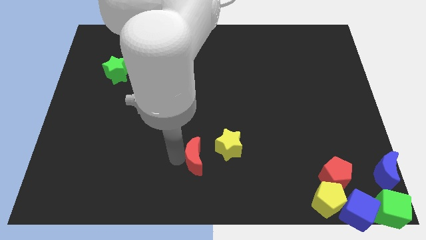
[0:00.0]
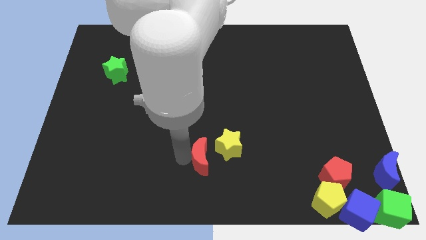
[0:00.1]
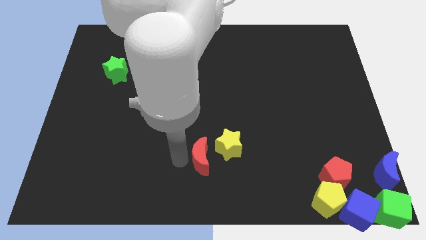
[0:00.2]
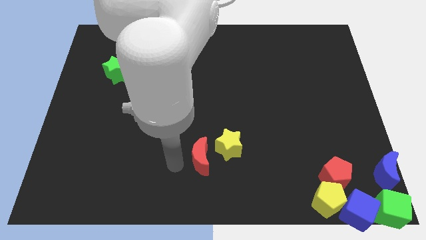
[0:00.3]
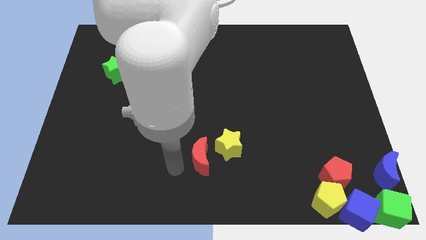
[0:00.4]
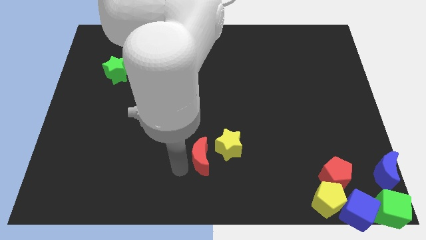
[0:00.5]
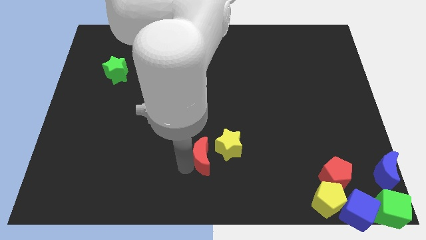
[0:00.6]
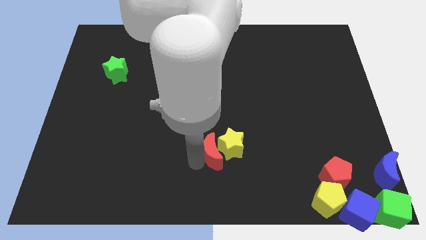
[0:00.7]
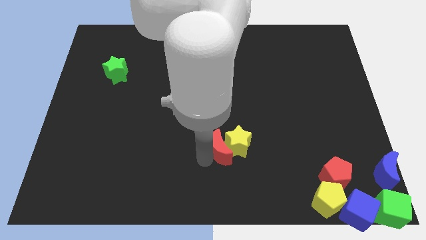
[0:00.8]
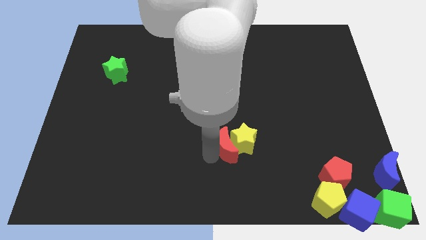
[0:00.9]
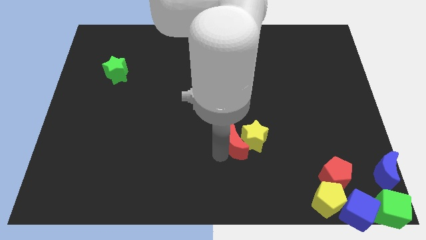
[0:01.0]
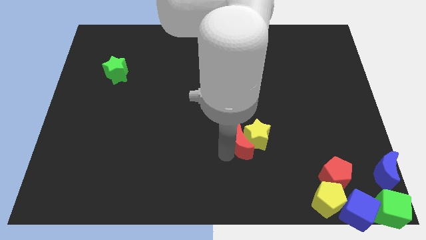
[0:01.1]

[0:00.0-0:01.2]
place the red moon to the left side of the yellow star

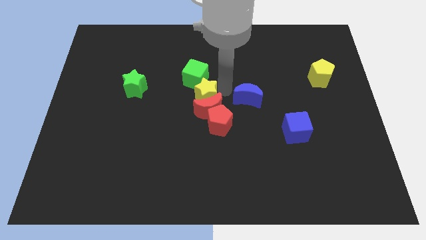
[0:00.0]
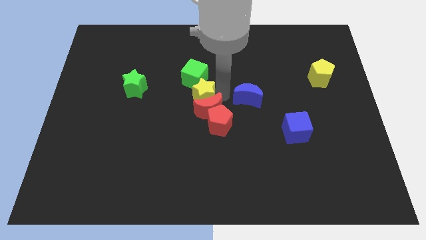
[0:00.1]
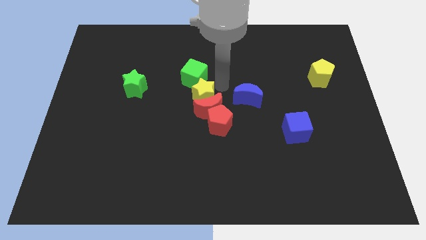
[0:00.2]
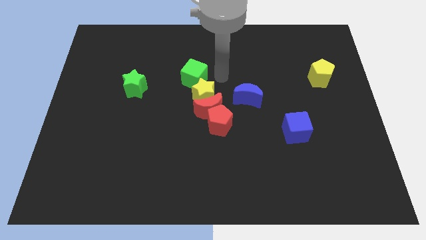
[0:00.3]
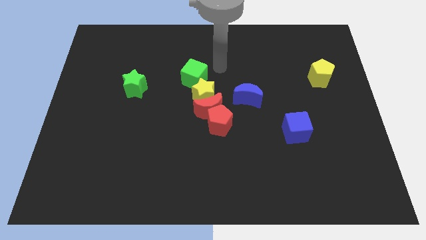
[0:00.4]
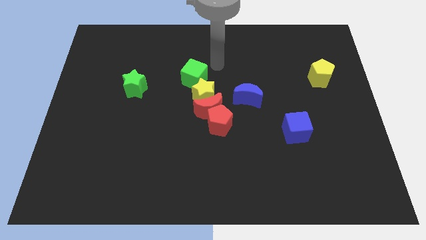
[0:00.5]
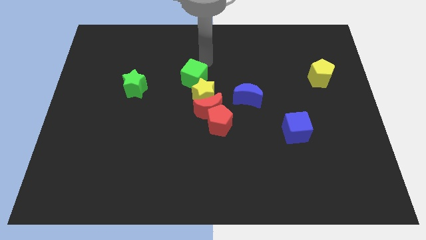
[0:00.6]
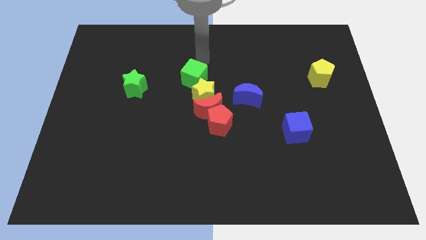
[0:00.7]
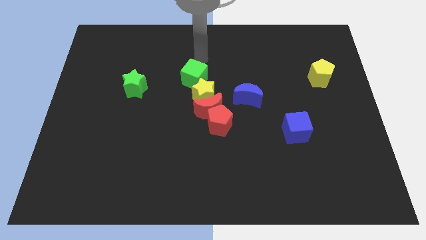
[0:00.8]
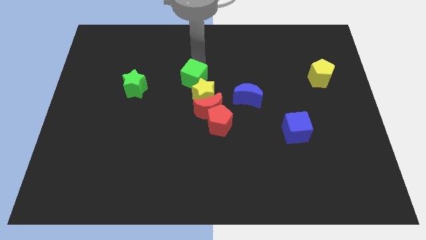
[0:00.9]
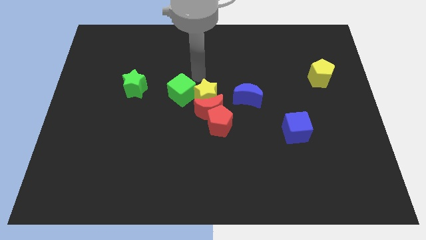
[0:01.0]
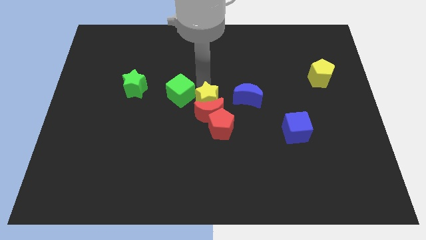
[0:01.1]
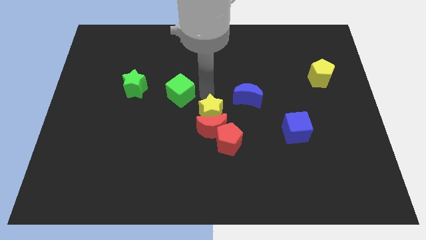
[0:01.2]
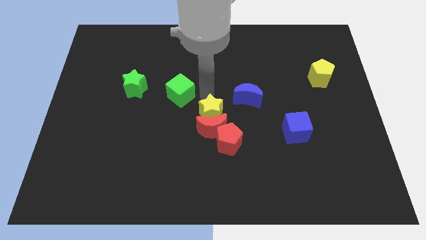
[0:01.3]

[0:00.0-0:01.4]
move the group of blocks towards the center of the board

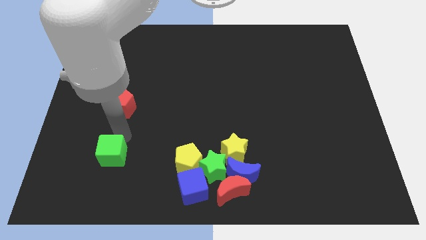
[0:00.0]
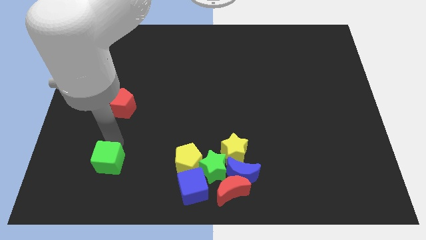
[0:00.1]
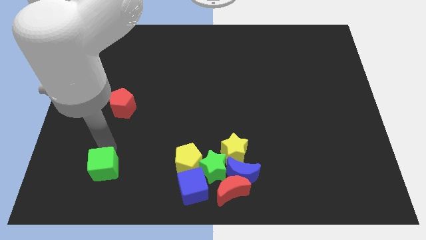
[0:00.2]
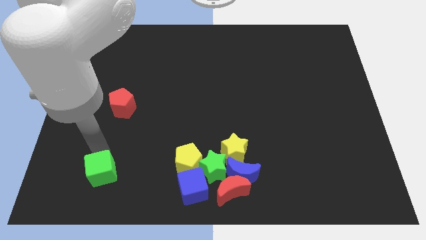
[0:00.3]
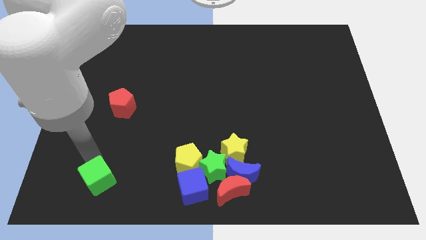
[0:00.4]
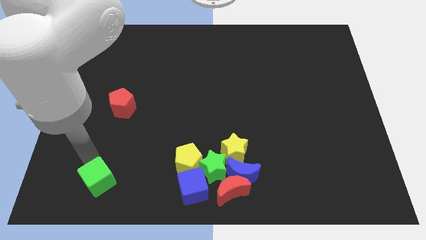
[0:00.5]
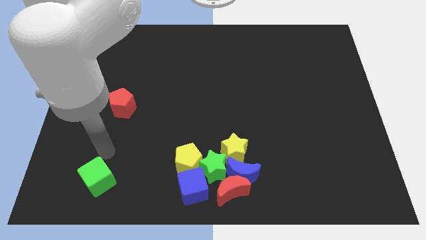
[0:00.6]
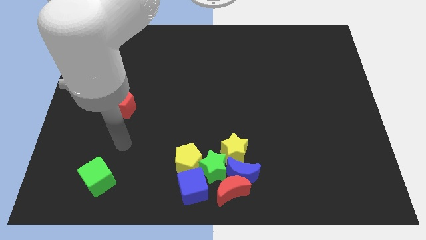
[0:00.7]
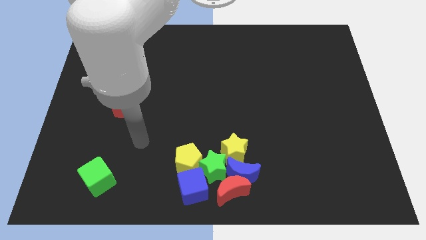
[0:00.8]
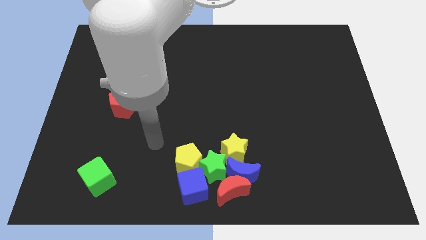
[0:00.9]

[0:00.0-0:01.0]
slightly push the green cube to the down

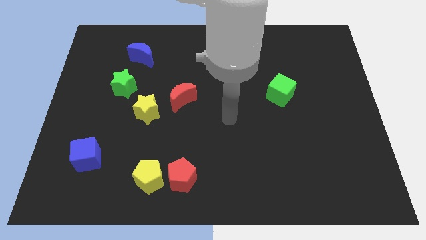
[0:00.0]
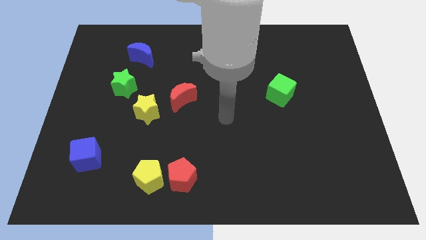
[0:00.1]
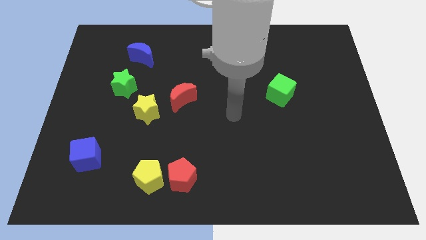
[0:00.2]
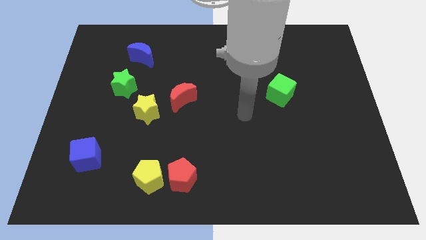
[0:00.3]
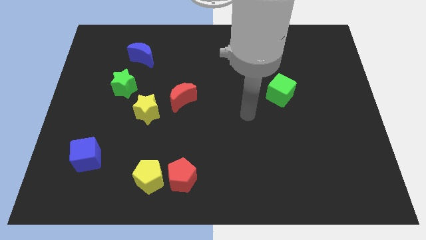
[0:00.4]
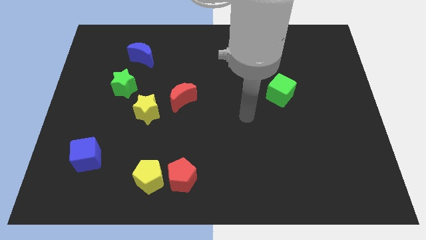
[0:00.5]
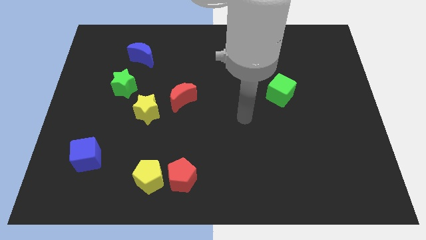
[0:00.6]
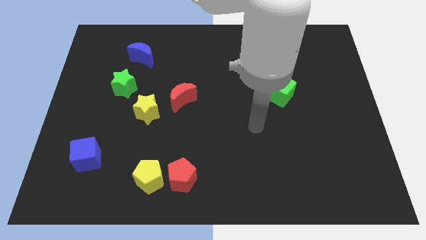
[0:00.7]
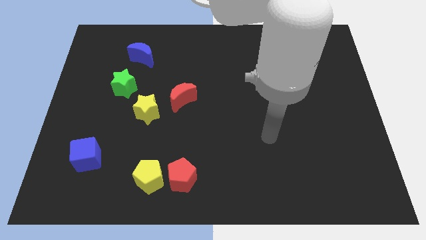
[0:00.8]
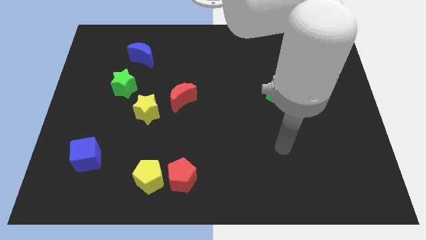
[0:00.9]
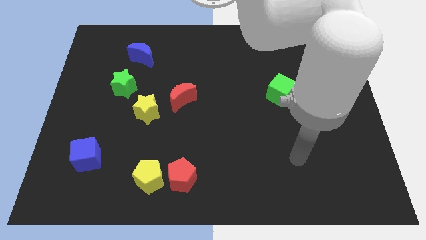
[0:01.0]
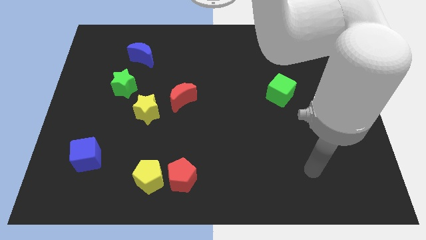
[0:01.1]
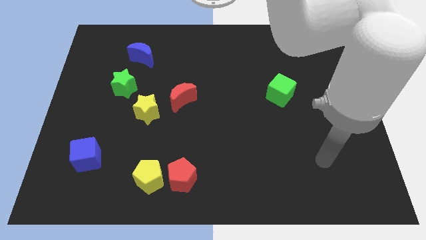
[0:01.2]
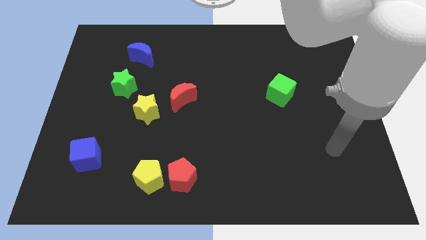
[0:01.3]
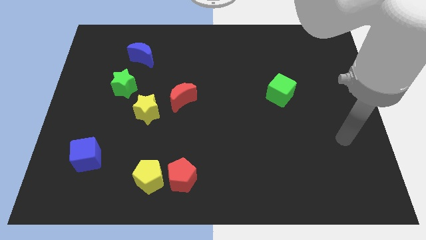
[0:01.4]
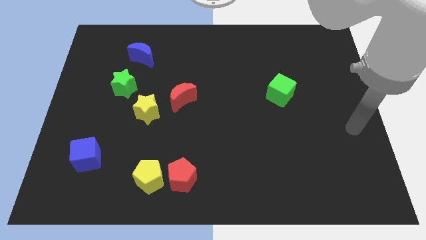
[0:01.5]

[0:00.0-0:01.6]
move your arm towards the right side of the board

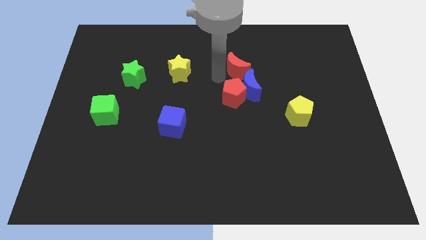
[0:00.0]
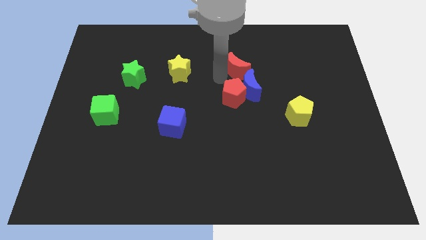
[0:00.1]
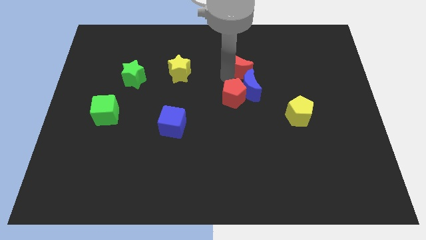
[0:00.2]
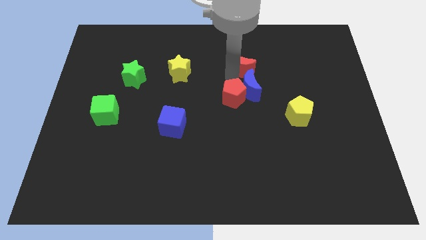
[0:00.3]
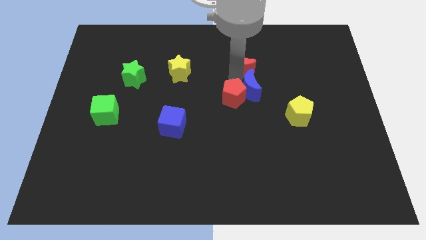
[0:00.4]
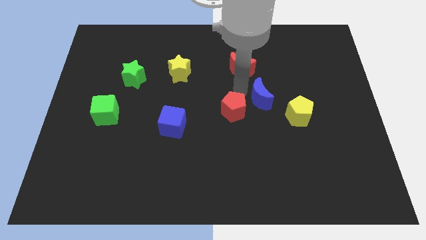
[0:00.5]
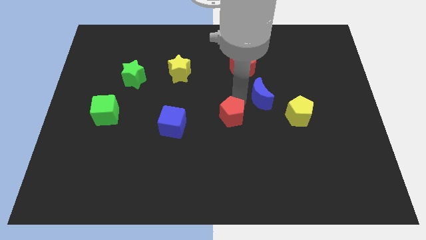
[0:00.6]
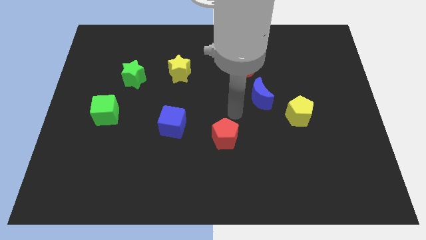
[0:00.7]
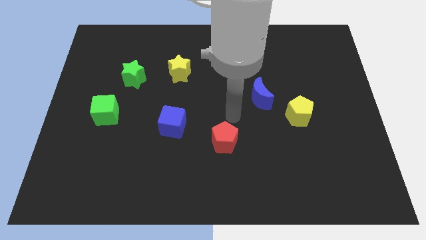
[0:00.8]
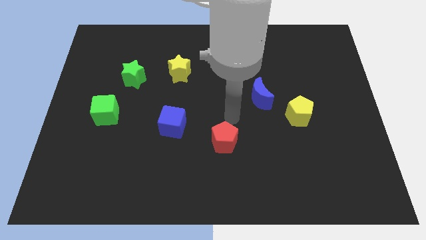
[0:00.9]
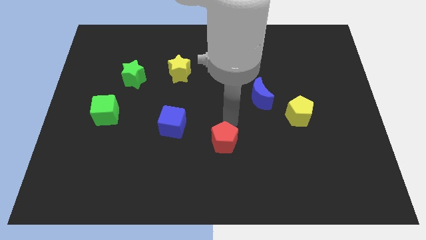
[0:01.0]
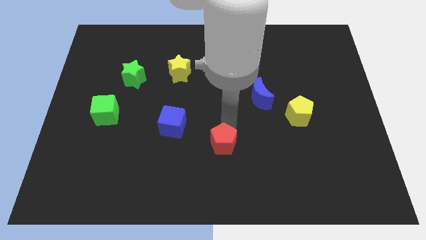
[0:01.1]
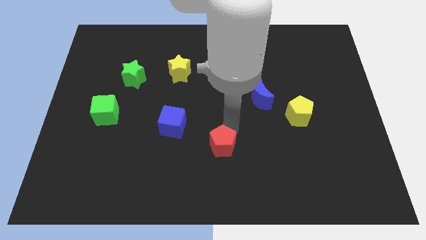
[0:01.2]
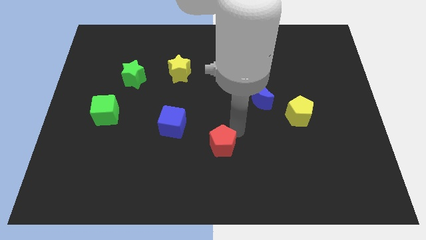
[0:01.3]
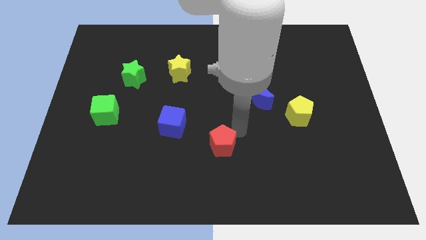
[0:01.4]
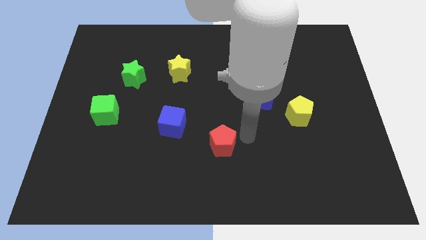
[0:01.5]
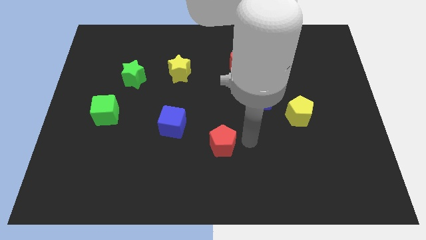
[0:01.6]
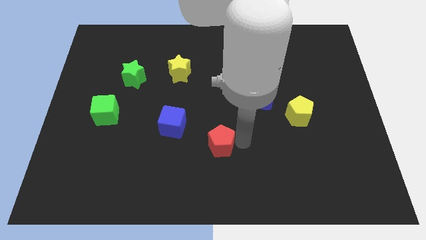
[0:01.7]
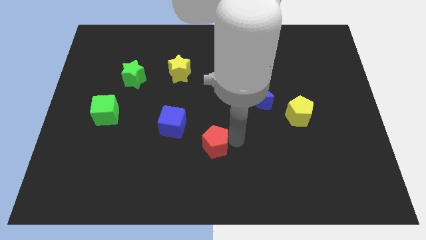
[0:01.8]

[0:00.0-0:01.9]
separate the red pentagon from the blue moon

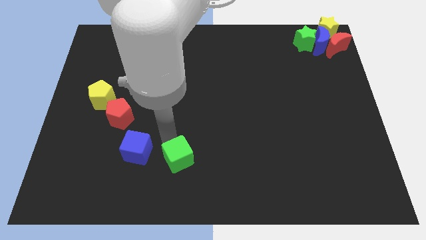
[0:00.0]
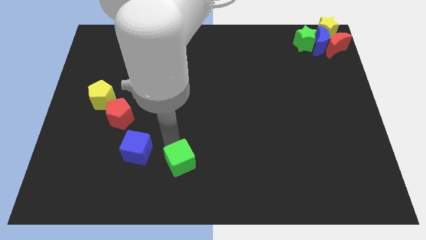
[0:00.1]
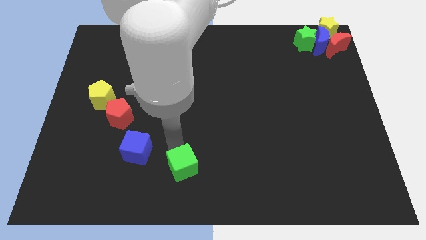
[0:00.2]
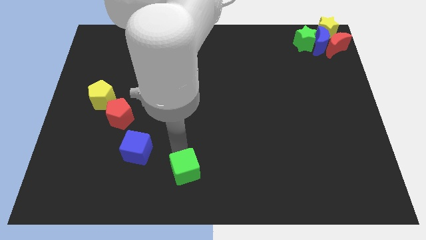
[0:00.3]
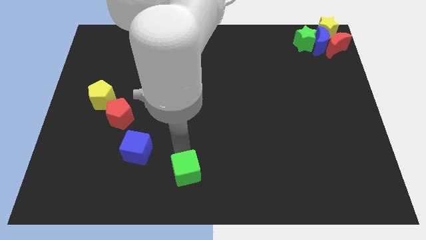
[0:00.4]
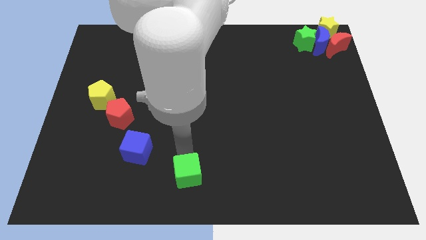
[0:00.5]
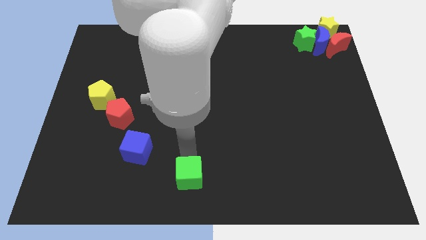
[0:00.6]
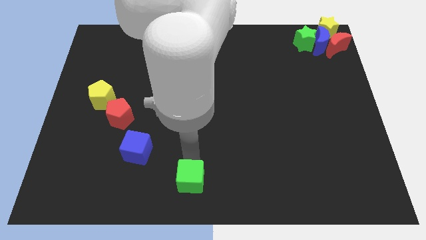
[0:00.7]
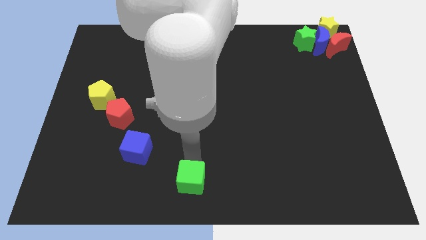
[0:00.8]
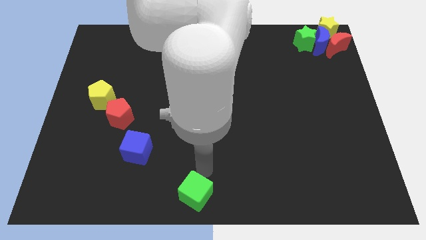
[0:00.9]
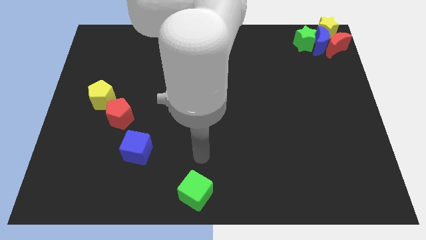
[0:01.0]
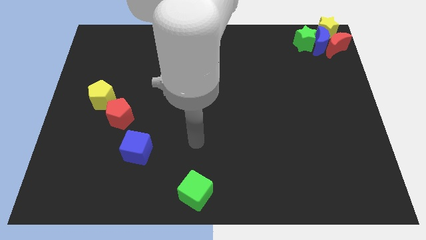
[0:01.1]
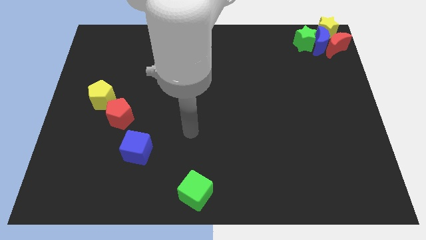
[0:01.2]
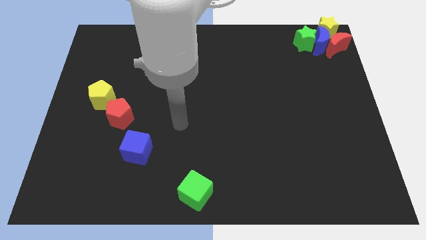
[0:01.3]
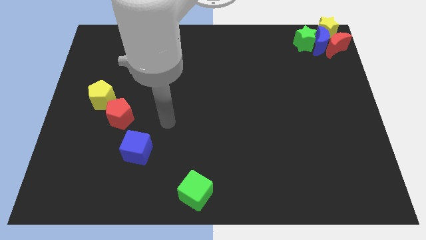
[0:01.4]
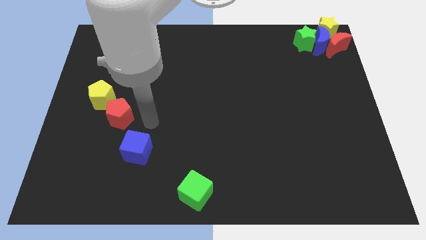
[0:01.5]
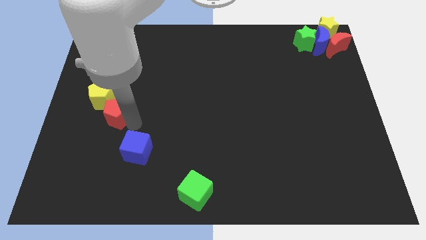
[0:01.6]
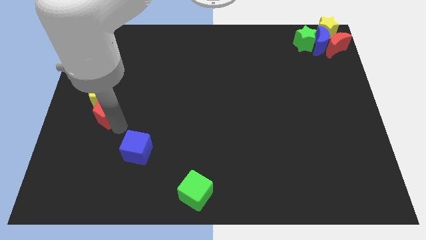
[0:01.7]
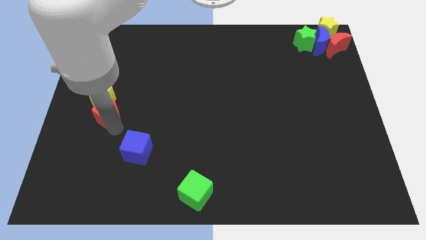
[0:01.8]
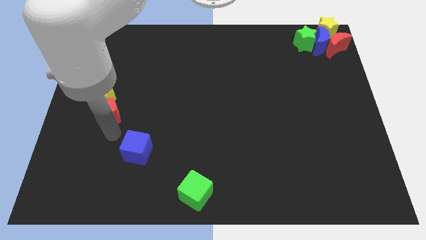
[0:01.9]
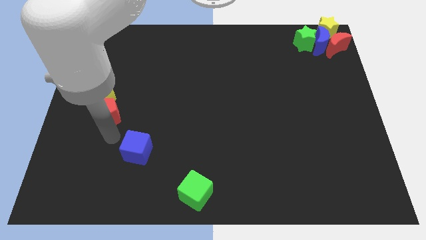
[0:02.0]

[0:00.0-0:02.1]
move the green cube to the bottom center
